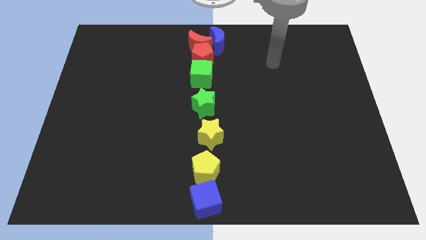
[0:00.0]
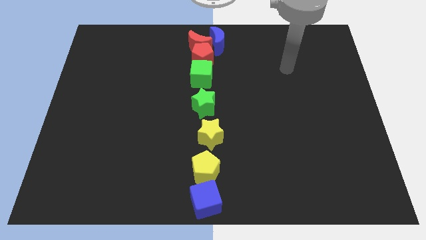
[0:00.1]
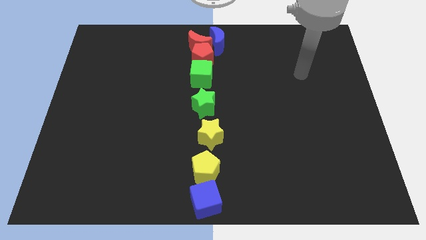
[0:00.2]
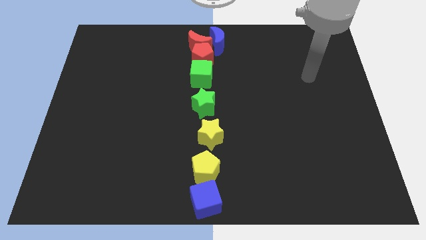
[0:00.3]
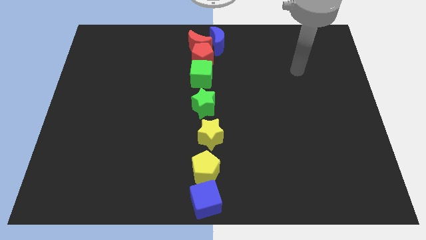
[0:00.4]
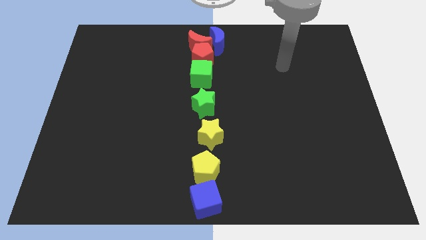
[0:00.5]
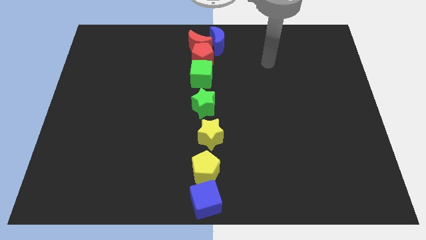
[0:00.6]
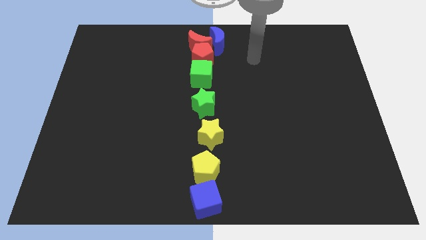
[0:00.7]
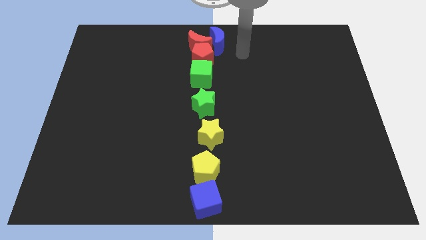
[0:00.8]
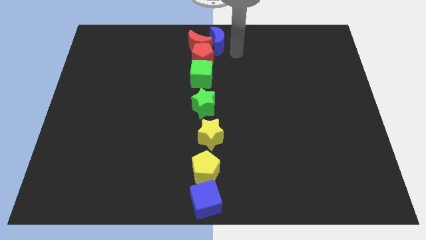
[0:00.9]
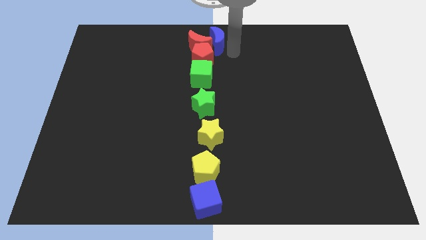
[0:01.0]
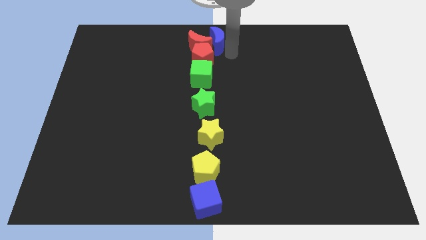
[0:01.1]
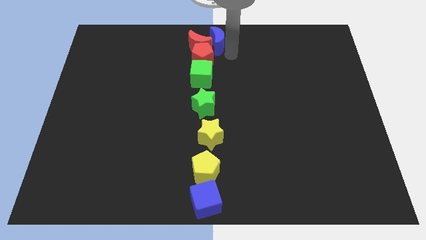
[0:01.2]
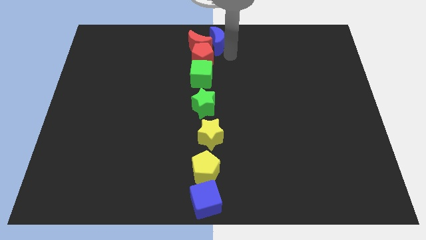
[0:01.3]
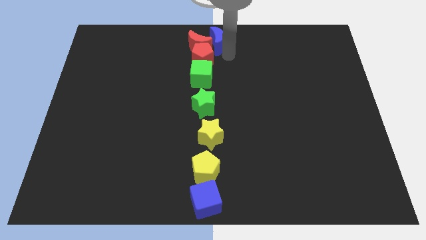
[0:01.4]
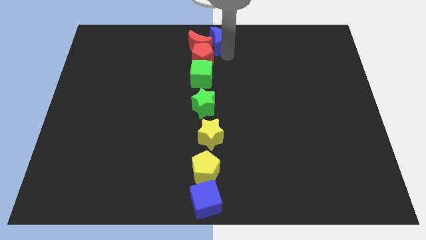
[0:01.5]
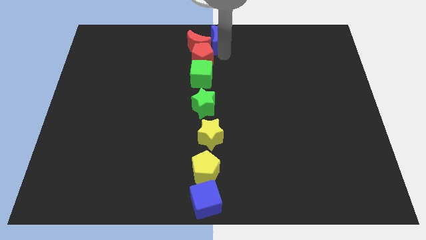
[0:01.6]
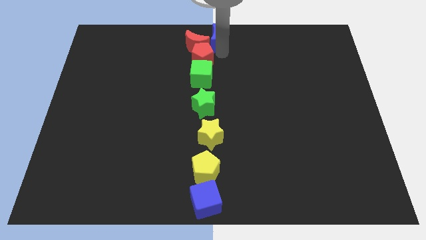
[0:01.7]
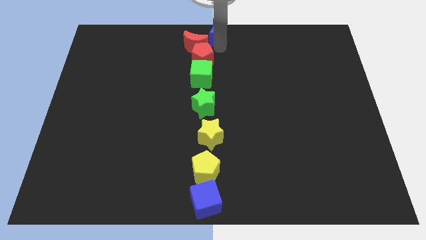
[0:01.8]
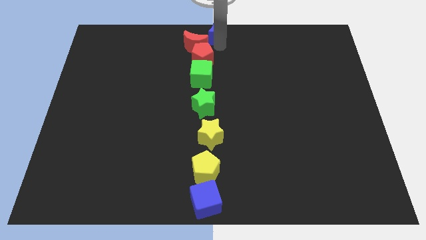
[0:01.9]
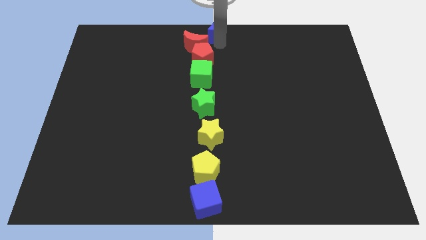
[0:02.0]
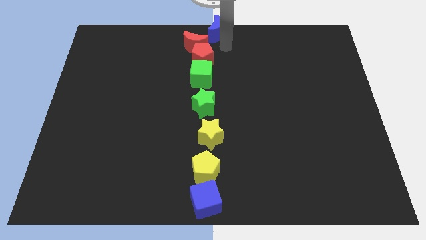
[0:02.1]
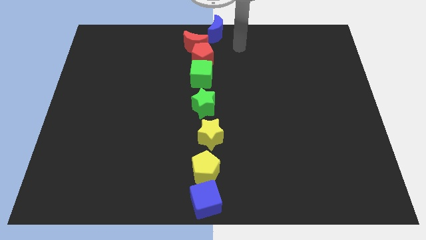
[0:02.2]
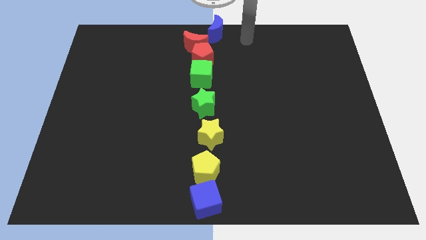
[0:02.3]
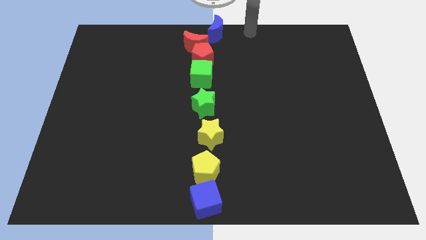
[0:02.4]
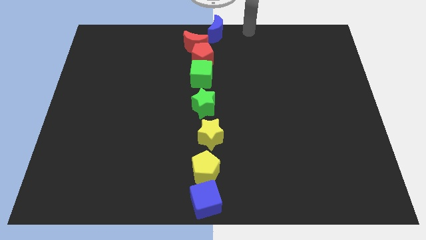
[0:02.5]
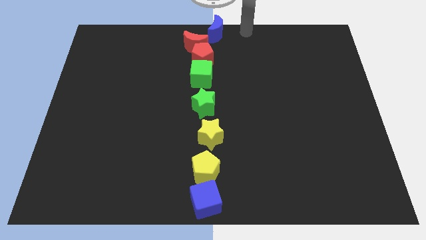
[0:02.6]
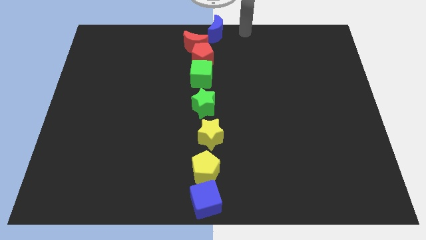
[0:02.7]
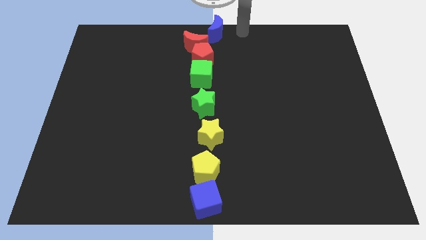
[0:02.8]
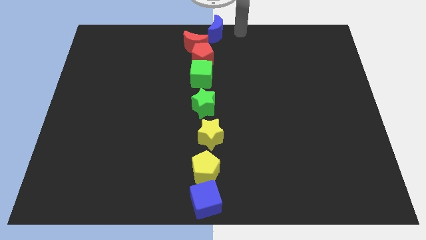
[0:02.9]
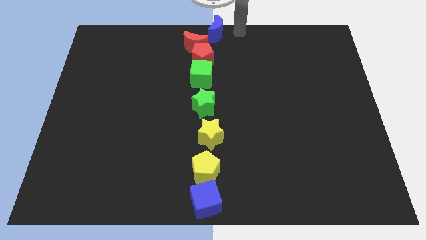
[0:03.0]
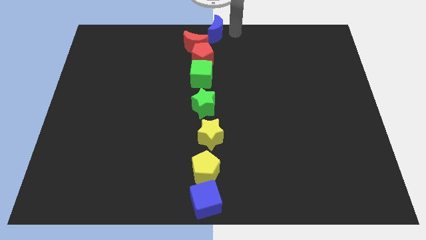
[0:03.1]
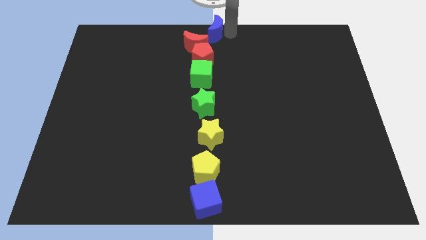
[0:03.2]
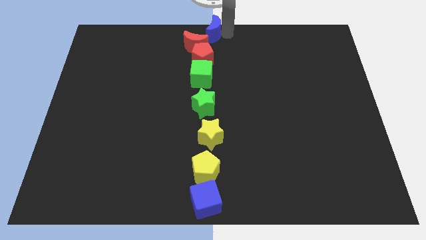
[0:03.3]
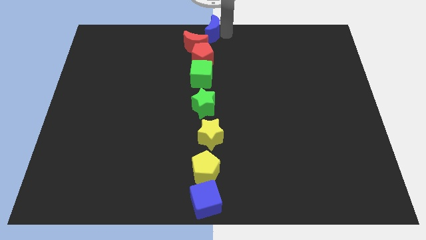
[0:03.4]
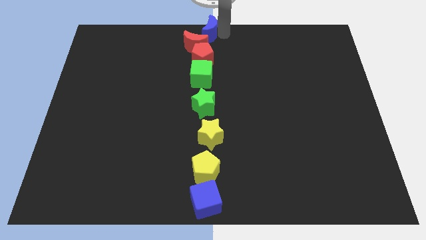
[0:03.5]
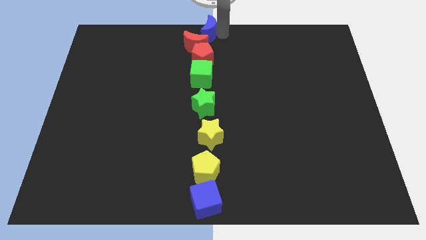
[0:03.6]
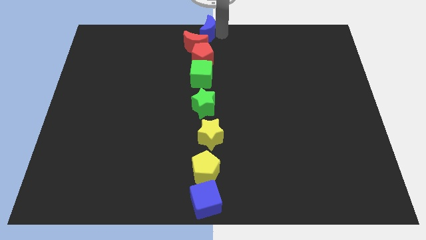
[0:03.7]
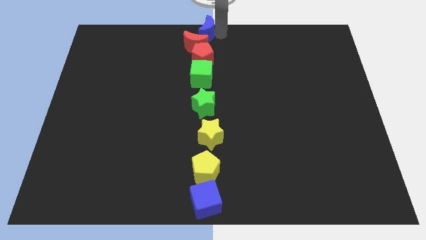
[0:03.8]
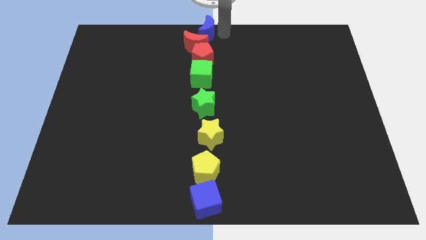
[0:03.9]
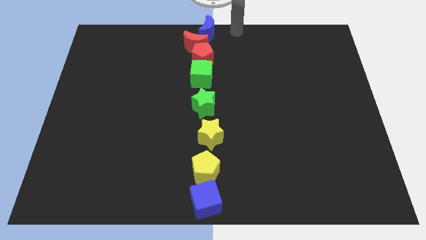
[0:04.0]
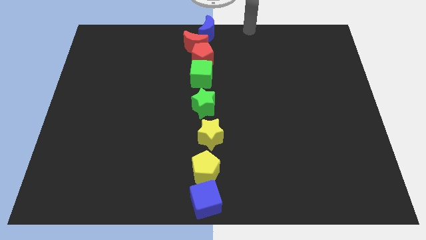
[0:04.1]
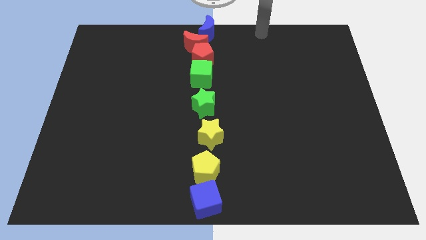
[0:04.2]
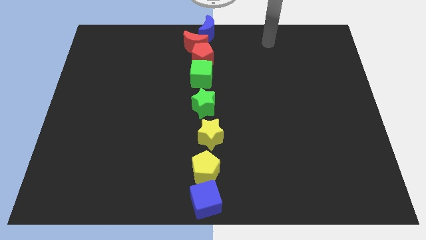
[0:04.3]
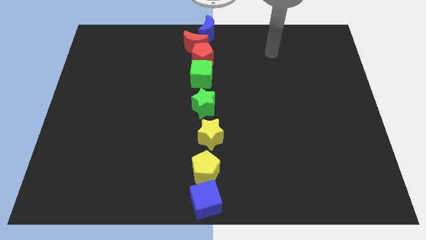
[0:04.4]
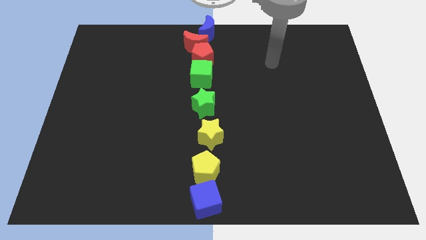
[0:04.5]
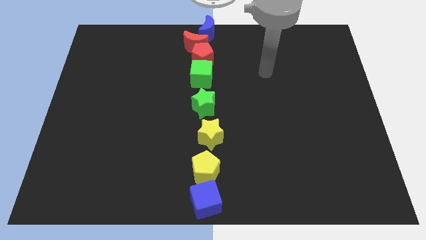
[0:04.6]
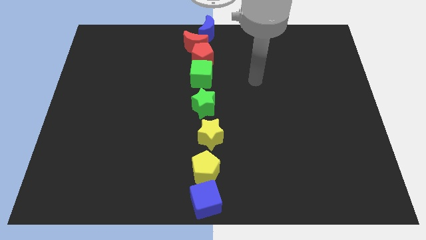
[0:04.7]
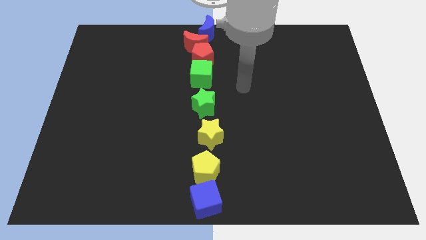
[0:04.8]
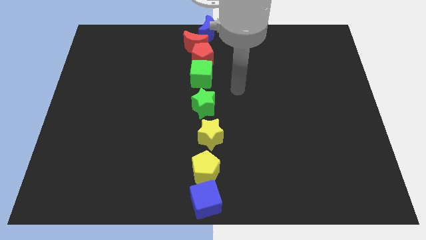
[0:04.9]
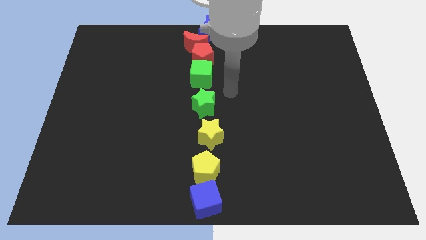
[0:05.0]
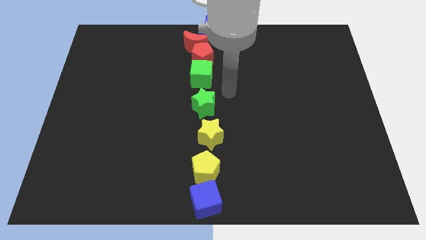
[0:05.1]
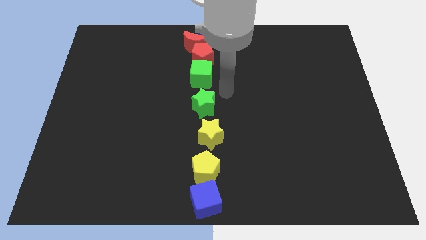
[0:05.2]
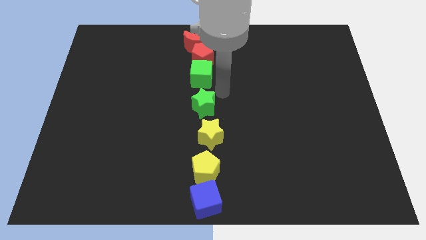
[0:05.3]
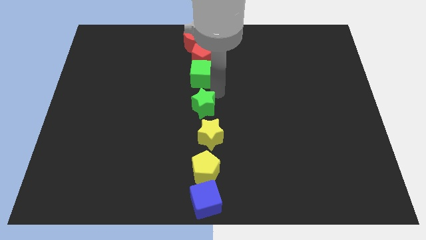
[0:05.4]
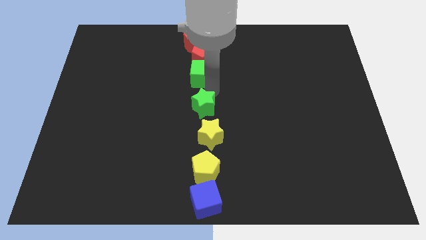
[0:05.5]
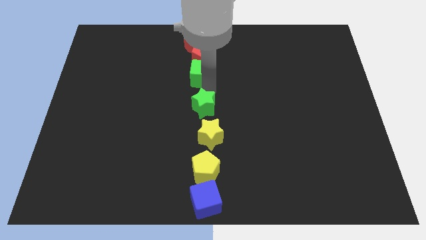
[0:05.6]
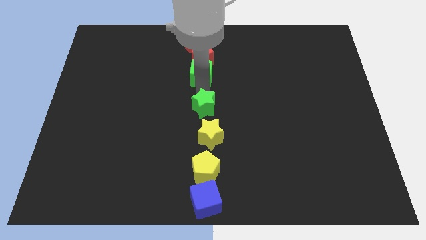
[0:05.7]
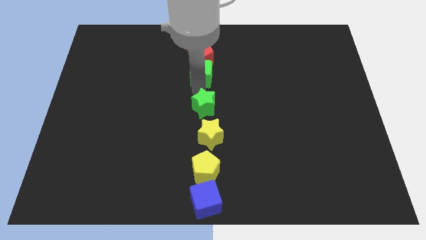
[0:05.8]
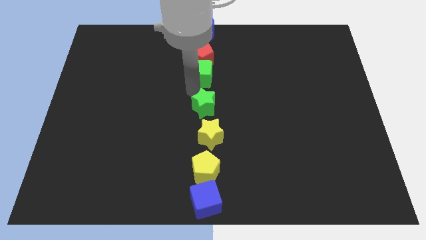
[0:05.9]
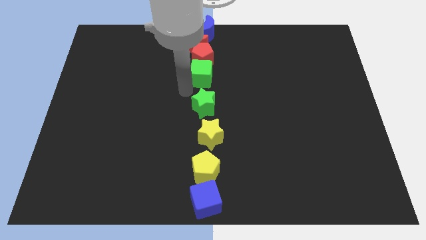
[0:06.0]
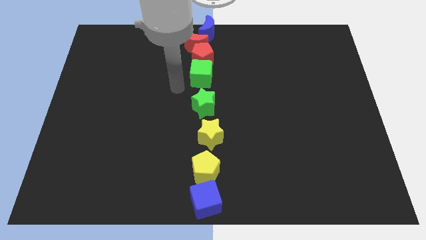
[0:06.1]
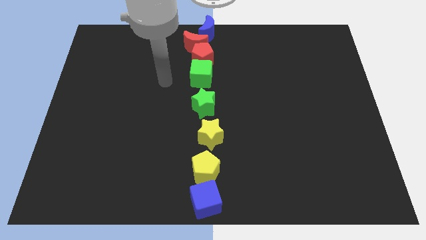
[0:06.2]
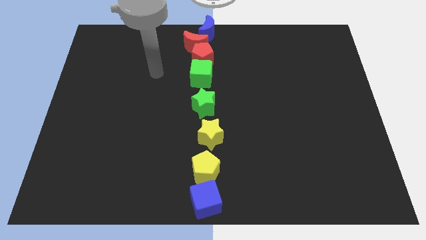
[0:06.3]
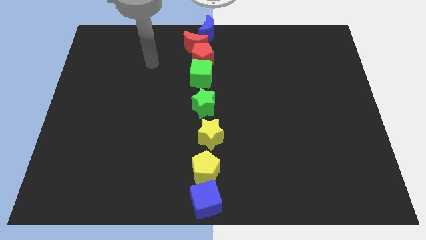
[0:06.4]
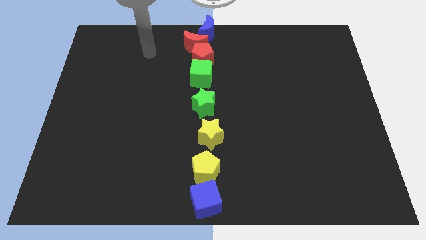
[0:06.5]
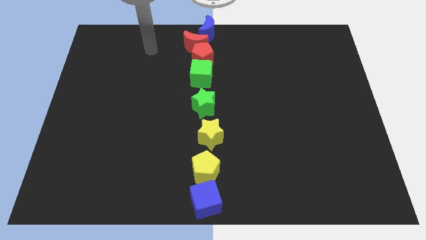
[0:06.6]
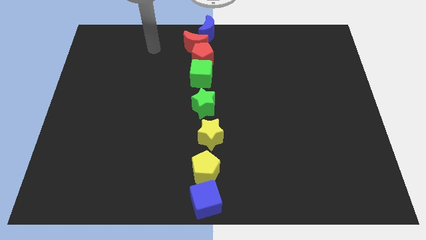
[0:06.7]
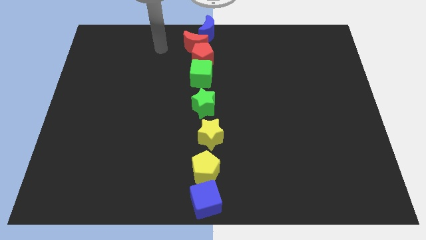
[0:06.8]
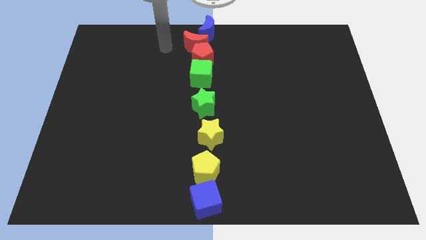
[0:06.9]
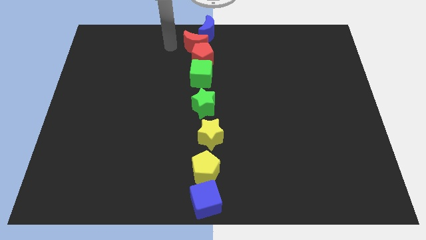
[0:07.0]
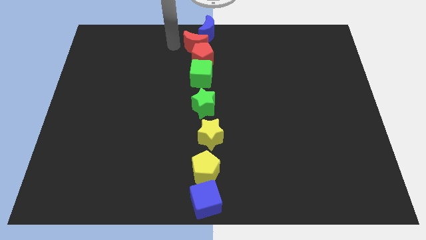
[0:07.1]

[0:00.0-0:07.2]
place the blue crescent above the red crescent

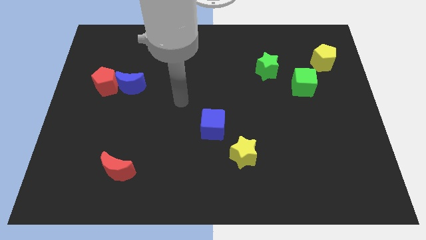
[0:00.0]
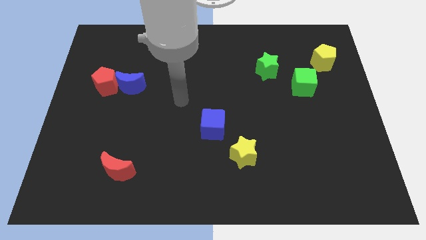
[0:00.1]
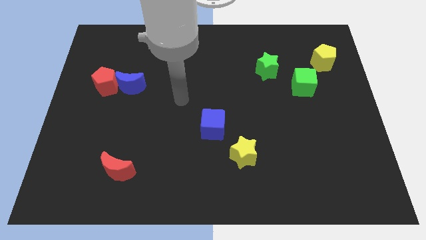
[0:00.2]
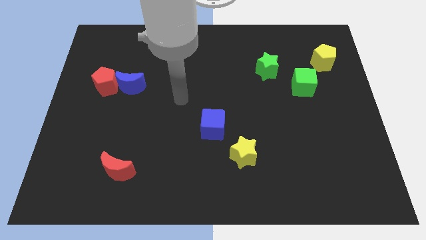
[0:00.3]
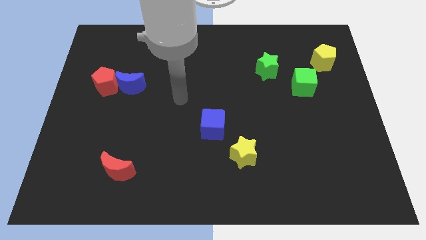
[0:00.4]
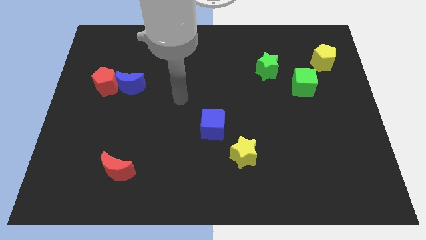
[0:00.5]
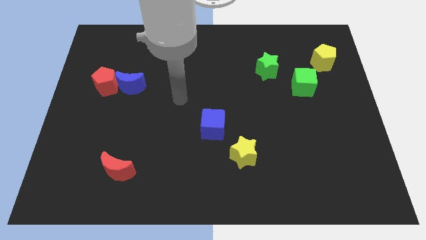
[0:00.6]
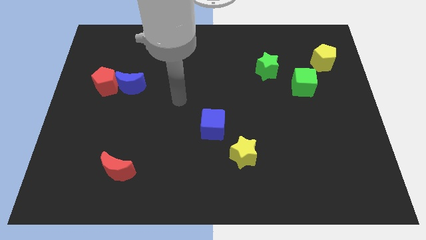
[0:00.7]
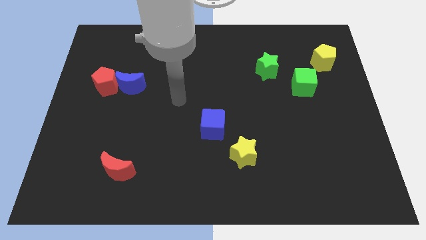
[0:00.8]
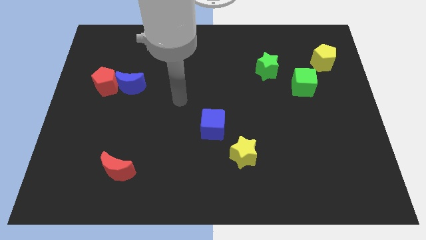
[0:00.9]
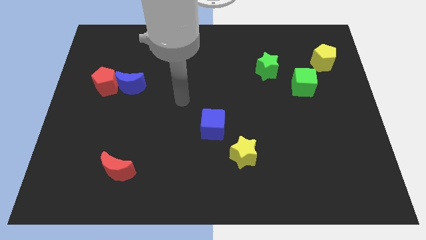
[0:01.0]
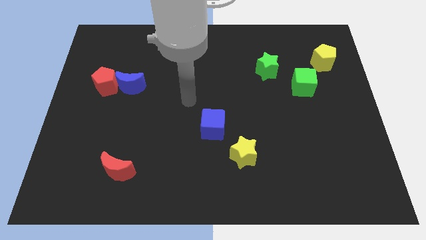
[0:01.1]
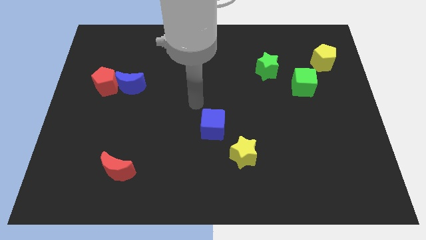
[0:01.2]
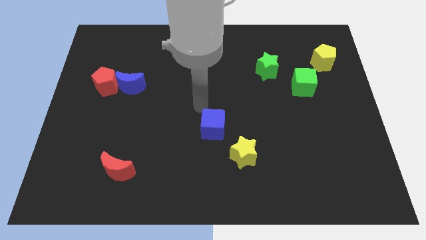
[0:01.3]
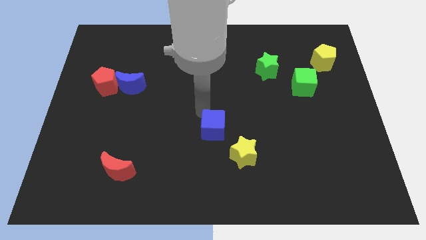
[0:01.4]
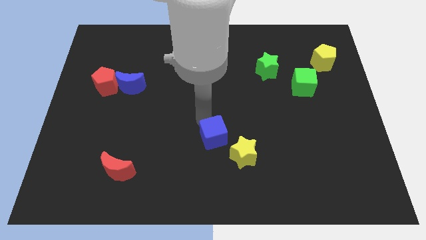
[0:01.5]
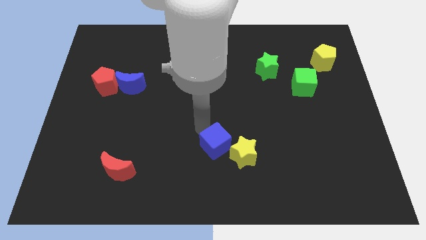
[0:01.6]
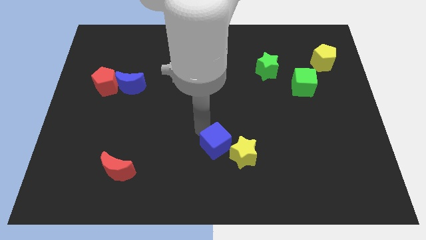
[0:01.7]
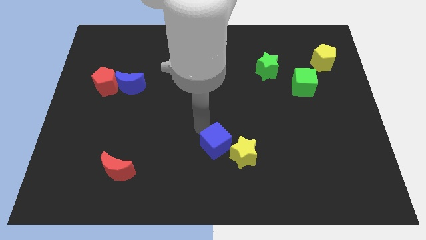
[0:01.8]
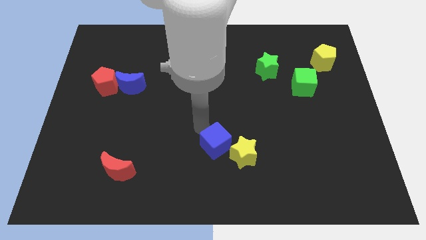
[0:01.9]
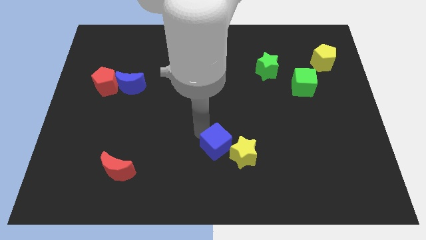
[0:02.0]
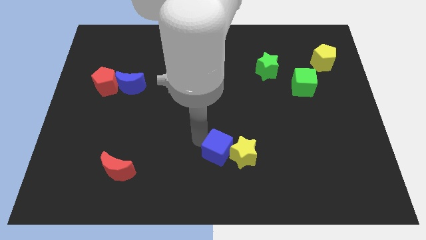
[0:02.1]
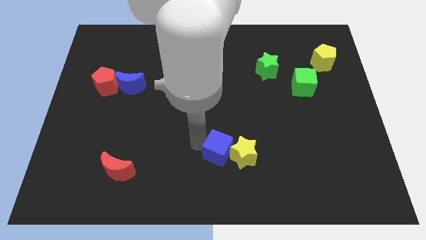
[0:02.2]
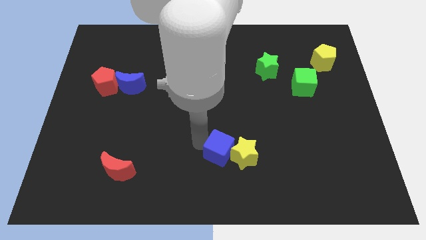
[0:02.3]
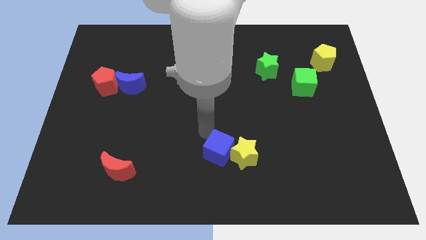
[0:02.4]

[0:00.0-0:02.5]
slightly push the blue cube to the left of the yellow star
